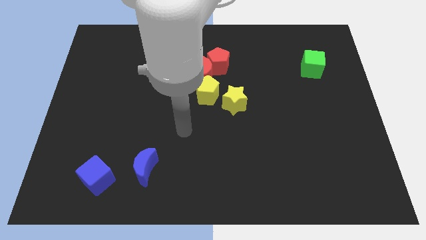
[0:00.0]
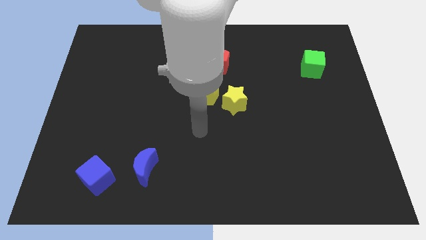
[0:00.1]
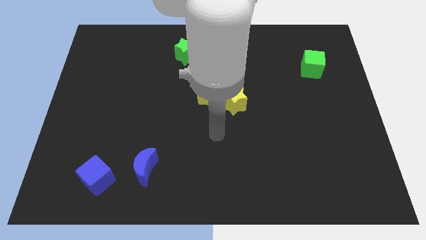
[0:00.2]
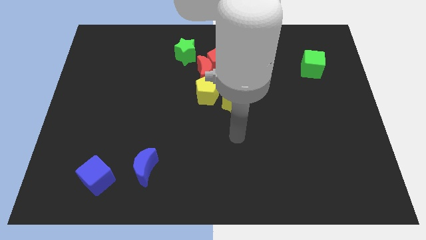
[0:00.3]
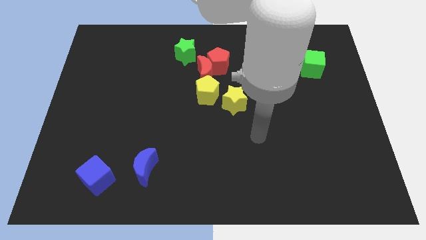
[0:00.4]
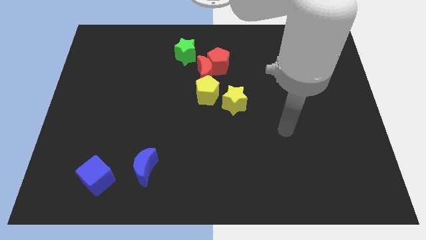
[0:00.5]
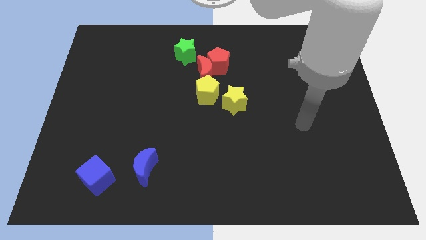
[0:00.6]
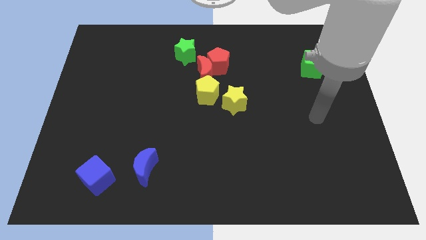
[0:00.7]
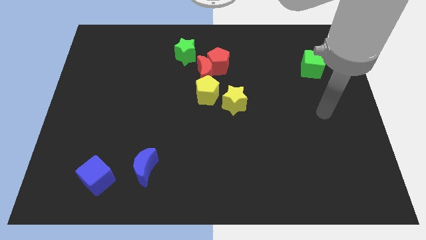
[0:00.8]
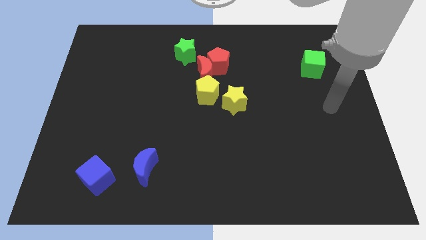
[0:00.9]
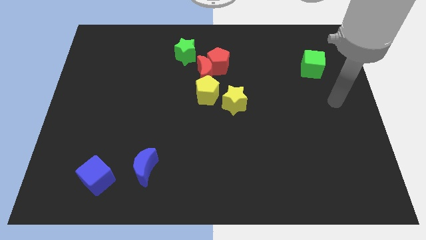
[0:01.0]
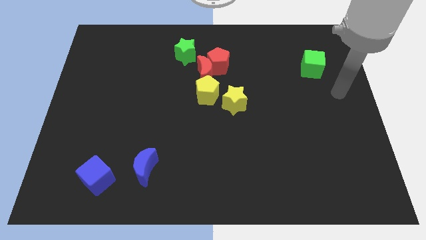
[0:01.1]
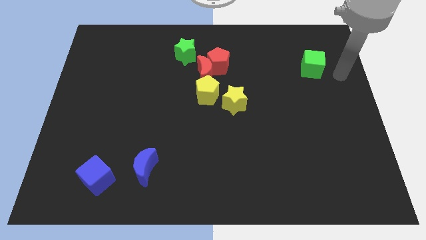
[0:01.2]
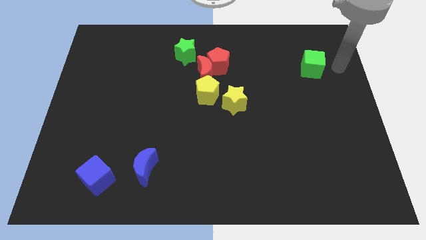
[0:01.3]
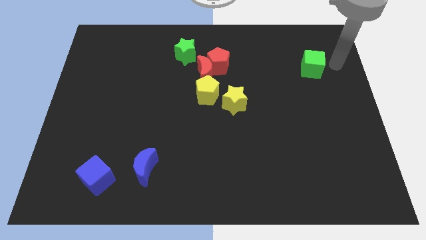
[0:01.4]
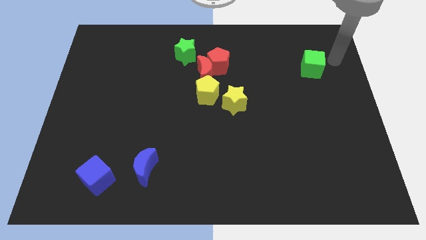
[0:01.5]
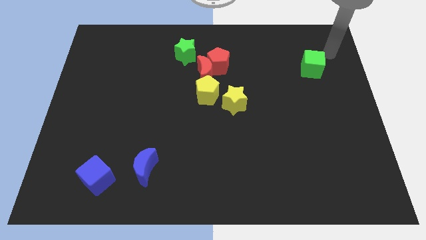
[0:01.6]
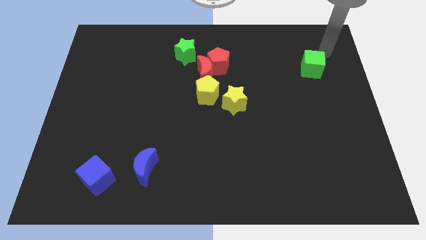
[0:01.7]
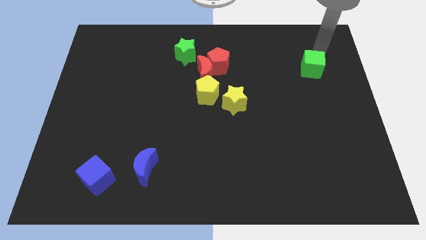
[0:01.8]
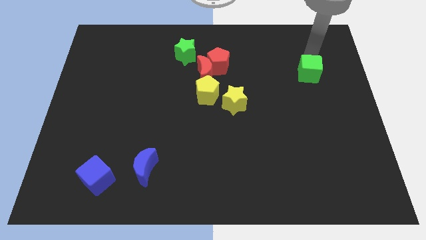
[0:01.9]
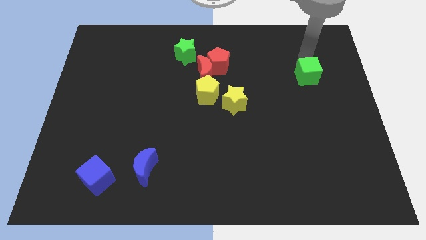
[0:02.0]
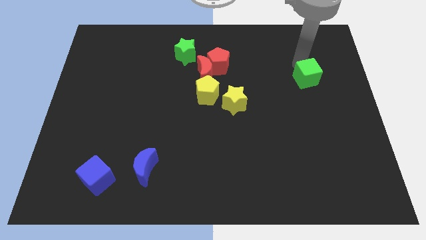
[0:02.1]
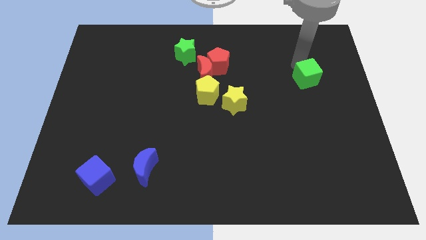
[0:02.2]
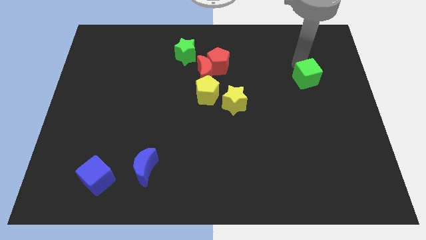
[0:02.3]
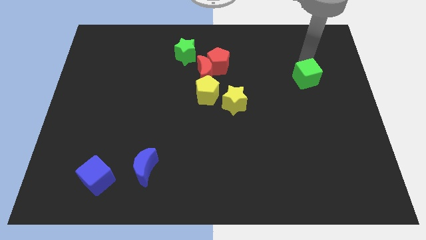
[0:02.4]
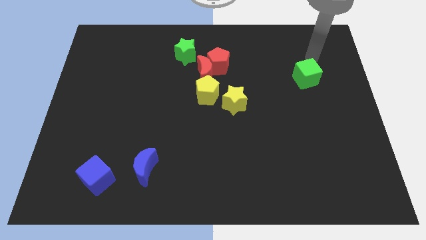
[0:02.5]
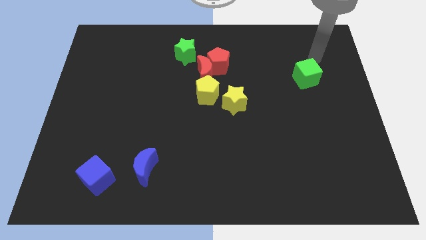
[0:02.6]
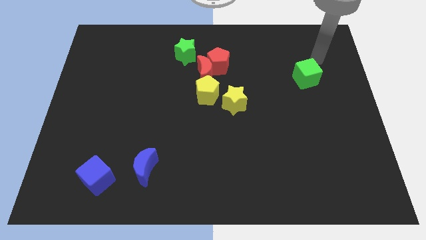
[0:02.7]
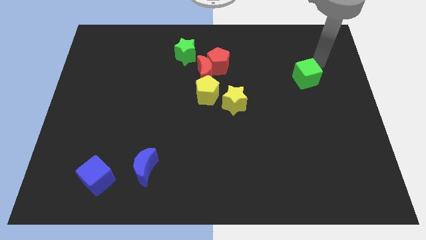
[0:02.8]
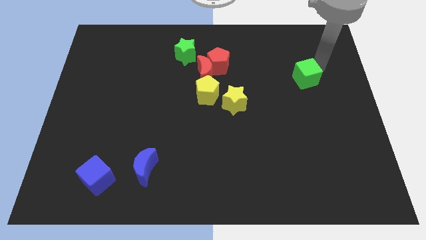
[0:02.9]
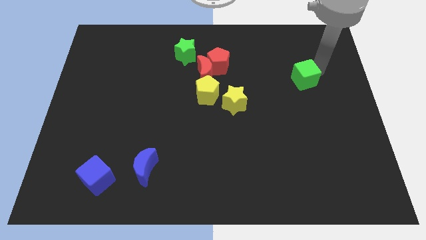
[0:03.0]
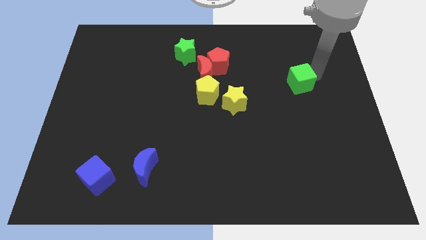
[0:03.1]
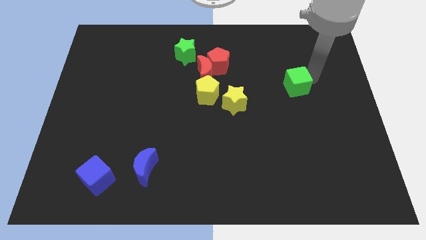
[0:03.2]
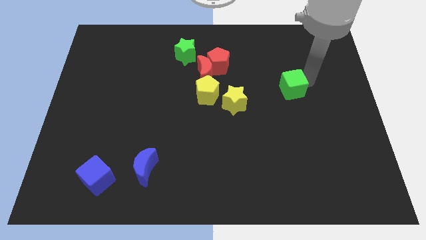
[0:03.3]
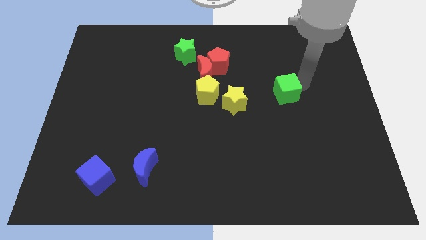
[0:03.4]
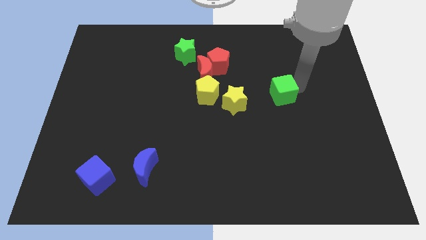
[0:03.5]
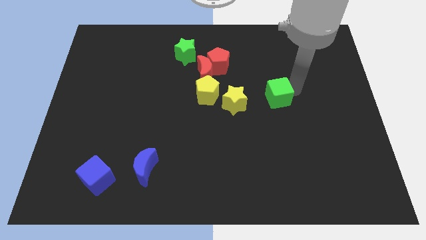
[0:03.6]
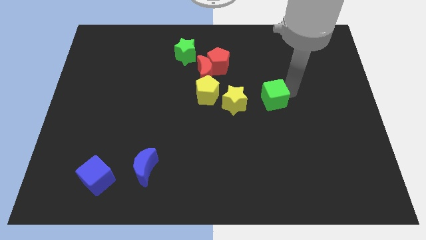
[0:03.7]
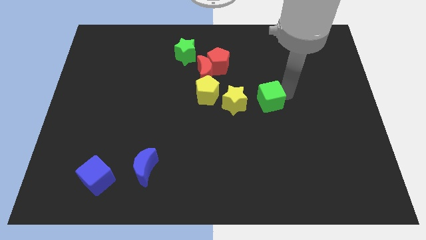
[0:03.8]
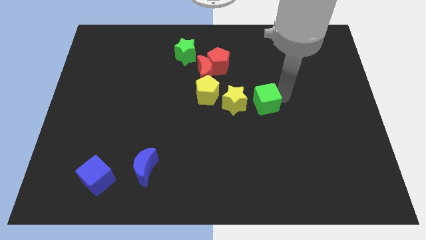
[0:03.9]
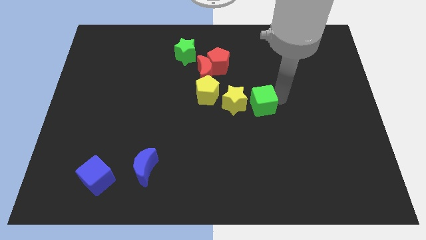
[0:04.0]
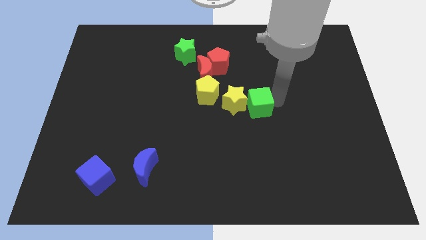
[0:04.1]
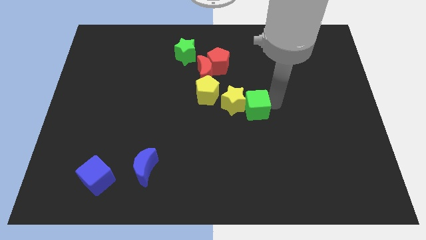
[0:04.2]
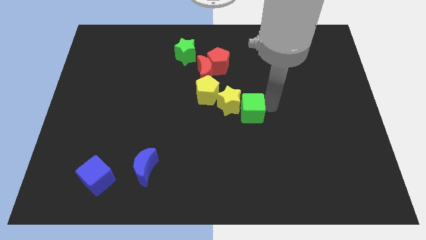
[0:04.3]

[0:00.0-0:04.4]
slide the green cube to the yellow star

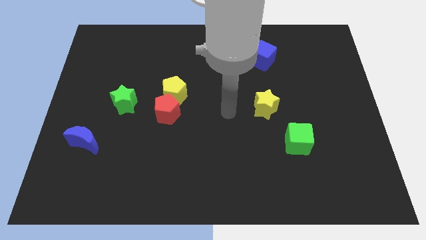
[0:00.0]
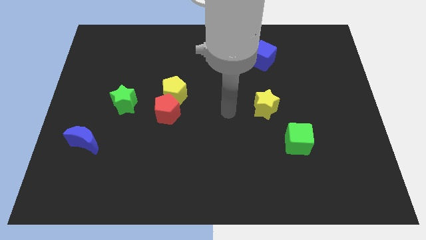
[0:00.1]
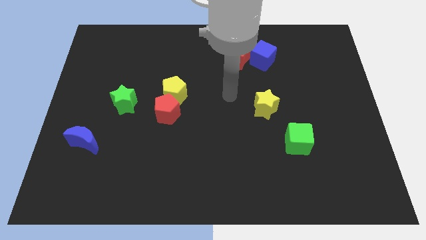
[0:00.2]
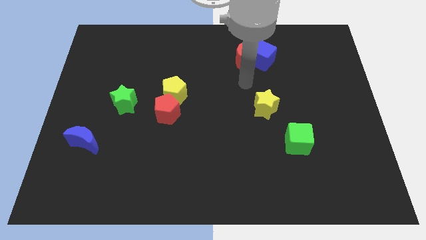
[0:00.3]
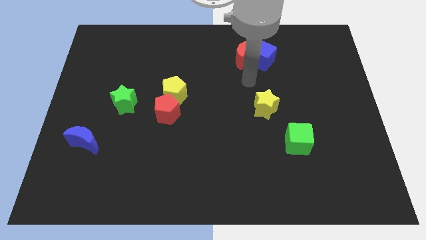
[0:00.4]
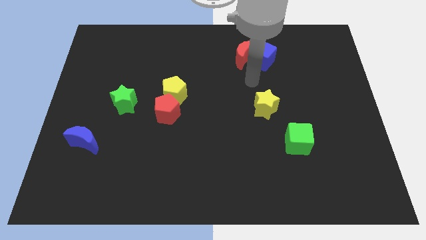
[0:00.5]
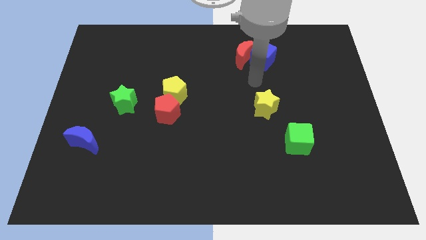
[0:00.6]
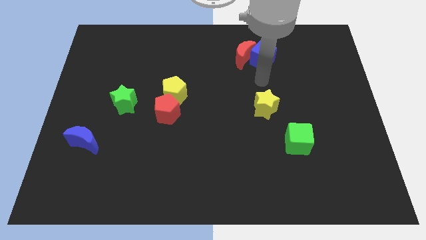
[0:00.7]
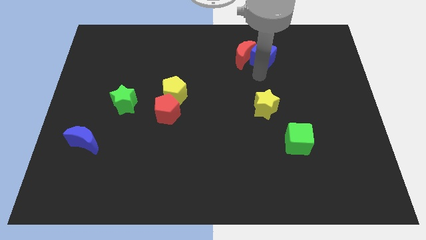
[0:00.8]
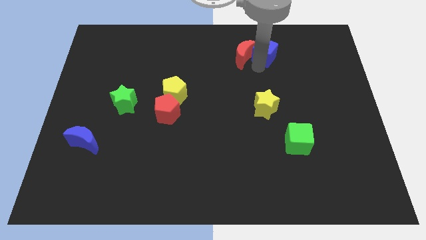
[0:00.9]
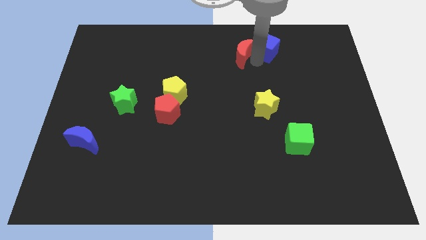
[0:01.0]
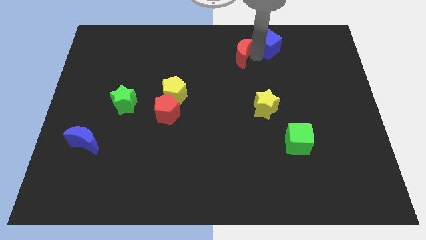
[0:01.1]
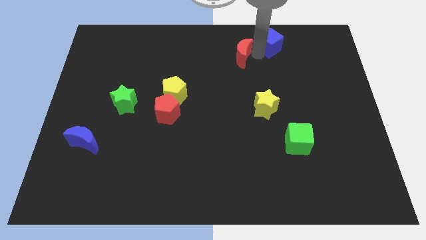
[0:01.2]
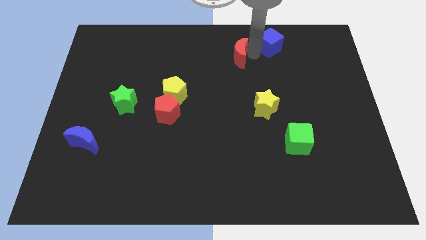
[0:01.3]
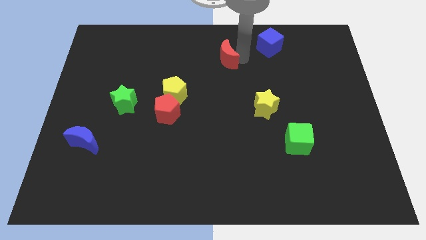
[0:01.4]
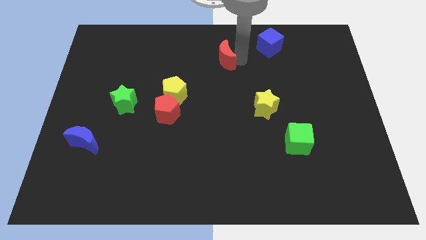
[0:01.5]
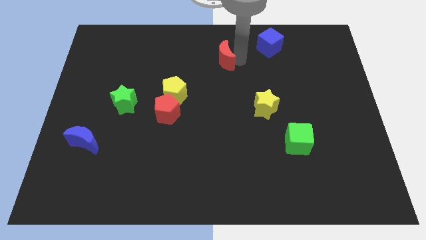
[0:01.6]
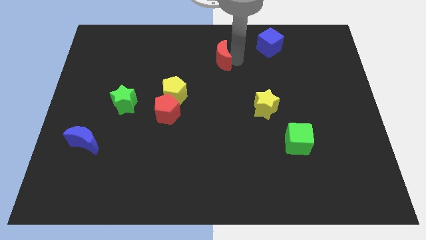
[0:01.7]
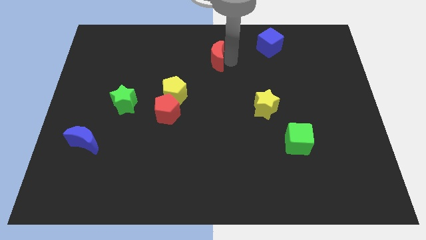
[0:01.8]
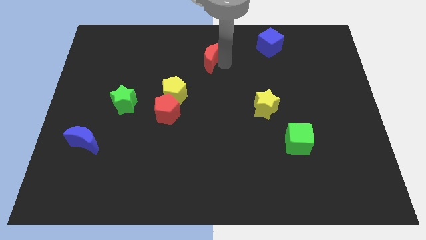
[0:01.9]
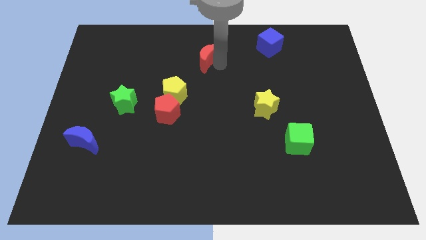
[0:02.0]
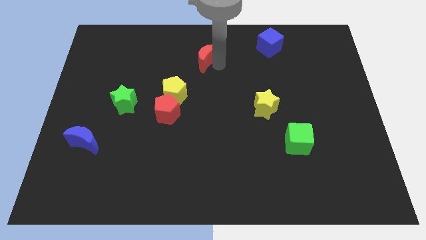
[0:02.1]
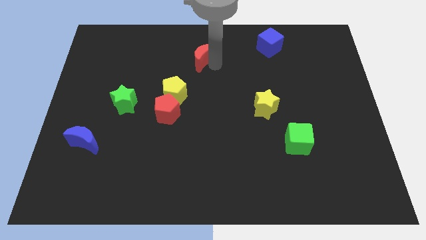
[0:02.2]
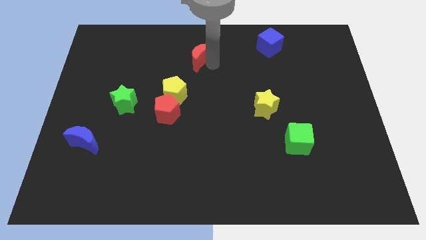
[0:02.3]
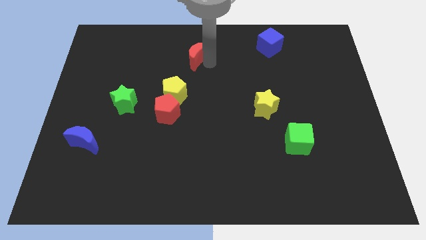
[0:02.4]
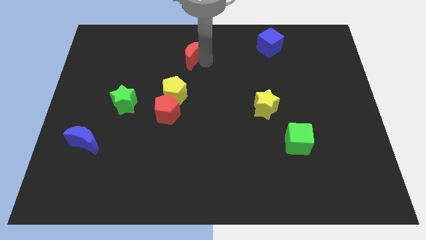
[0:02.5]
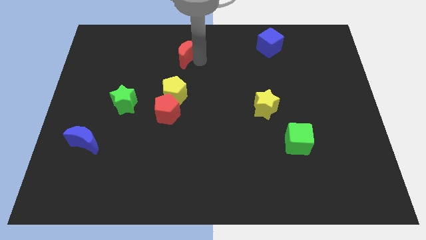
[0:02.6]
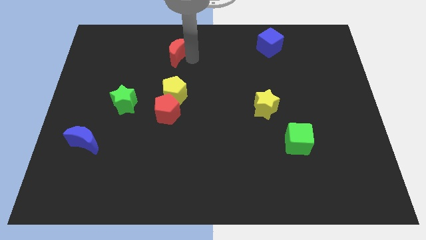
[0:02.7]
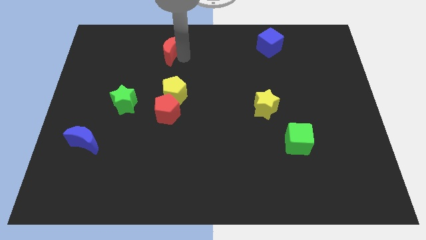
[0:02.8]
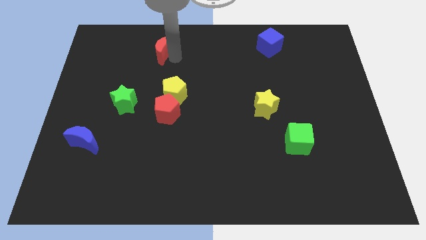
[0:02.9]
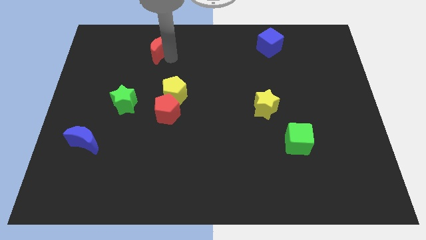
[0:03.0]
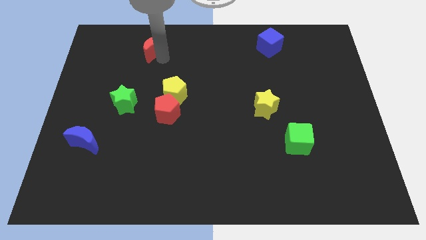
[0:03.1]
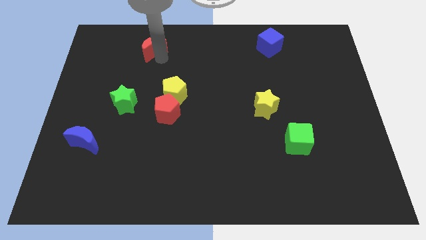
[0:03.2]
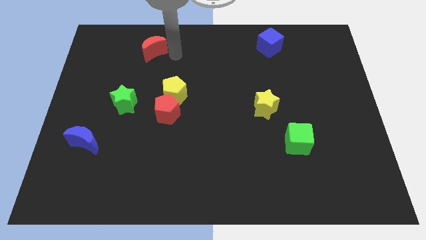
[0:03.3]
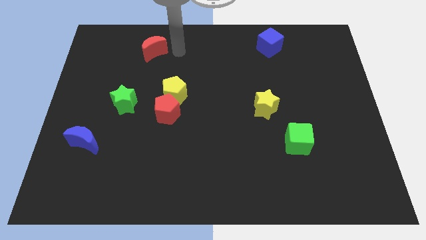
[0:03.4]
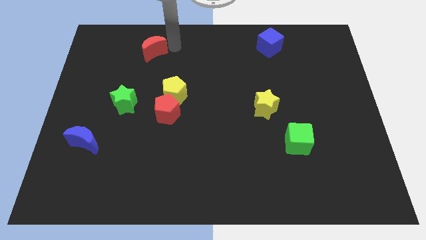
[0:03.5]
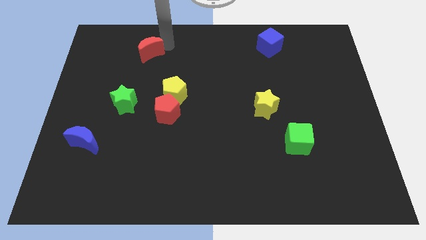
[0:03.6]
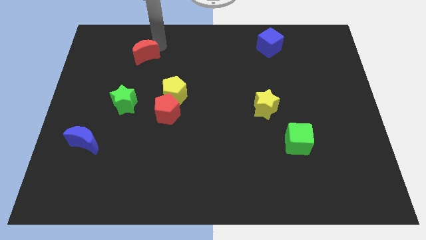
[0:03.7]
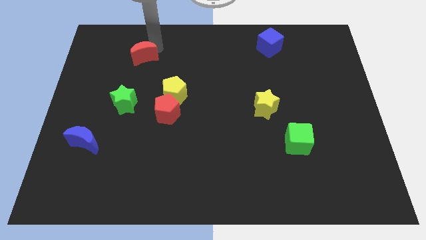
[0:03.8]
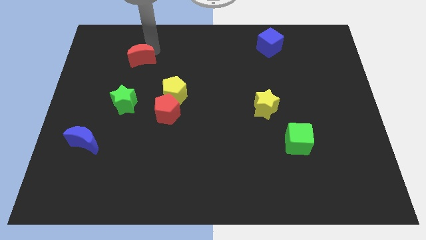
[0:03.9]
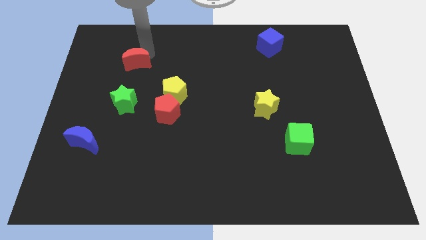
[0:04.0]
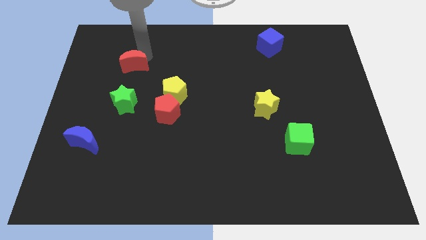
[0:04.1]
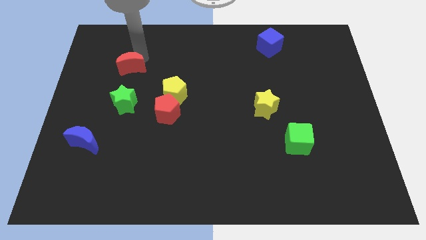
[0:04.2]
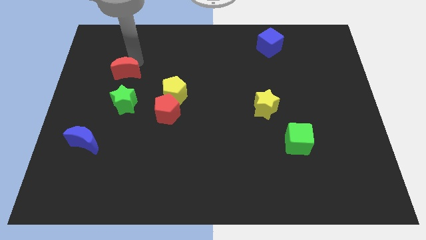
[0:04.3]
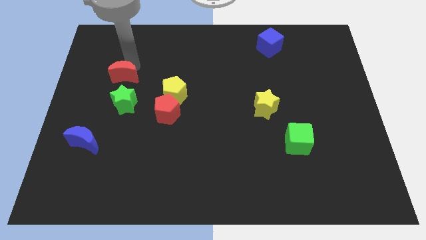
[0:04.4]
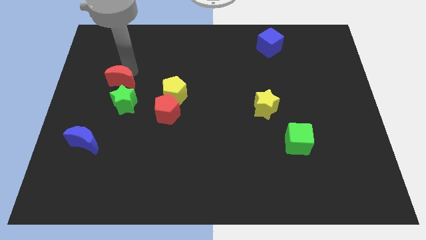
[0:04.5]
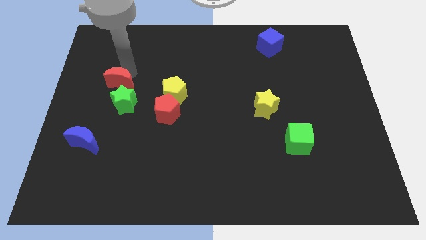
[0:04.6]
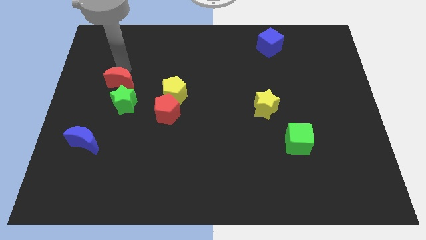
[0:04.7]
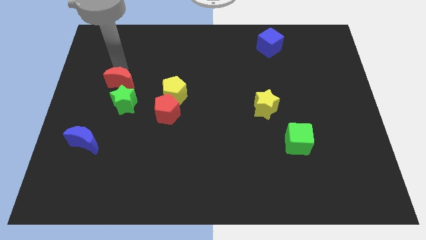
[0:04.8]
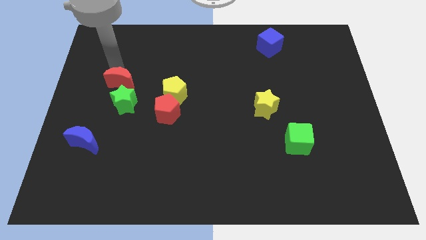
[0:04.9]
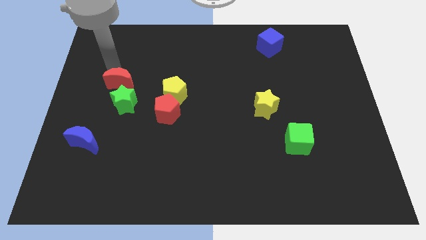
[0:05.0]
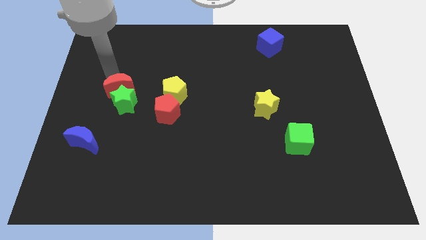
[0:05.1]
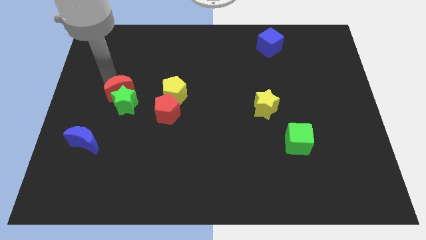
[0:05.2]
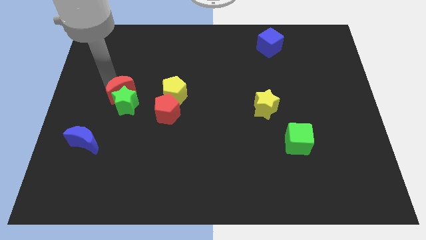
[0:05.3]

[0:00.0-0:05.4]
slide the red moon to the green star
